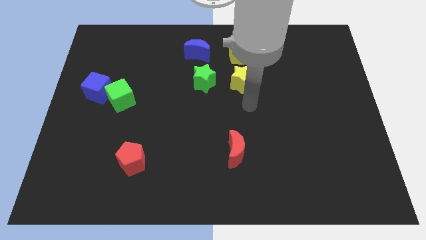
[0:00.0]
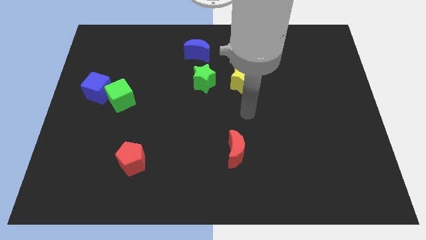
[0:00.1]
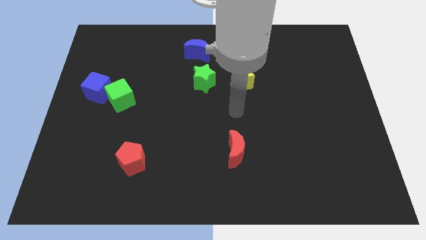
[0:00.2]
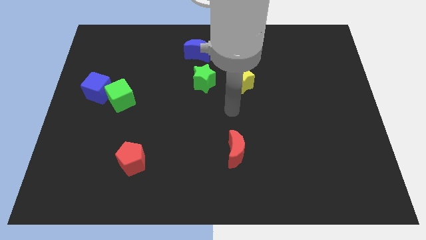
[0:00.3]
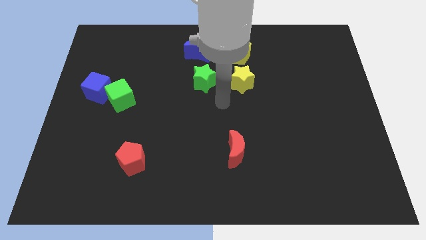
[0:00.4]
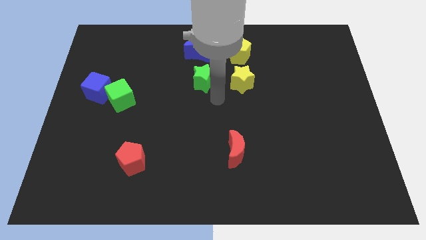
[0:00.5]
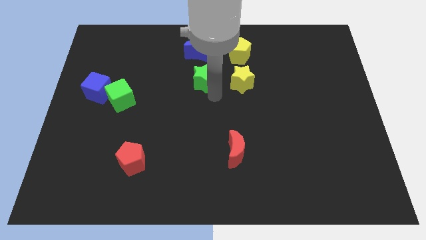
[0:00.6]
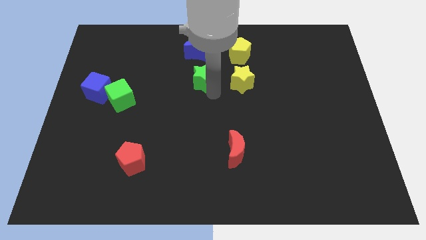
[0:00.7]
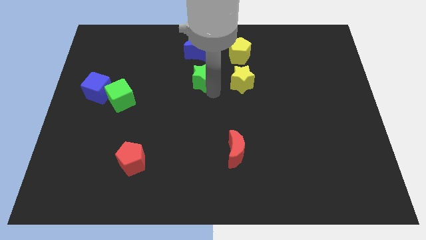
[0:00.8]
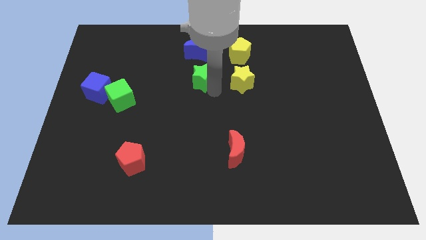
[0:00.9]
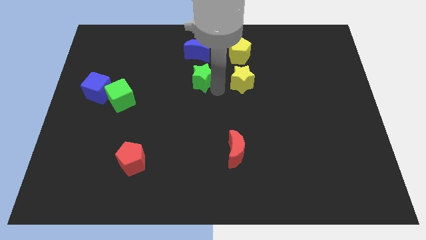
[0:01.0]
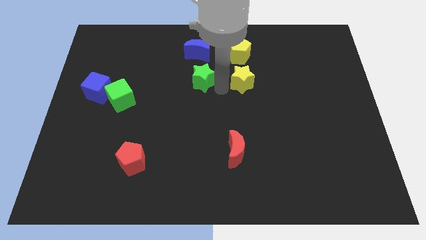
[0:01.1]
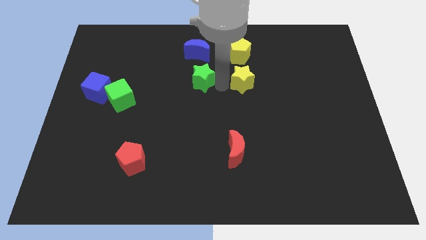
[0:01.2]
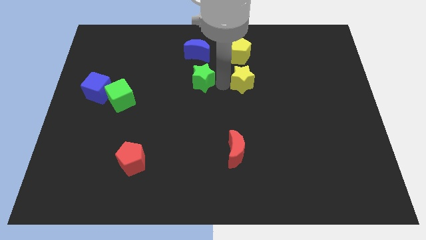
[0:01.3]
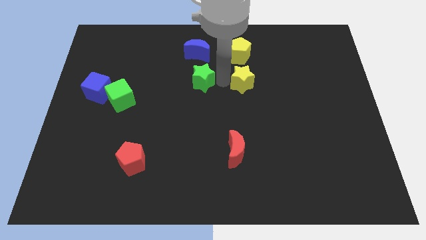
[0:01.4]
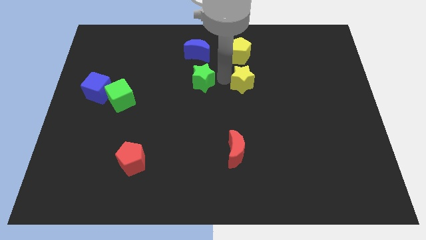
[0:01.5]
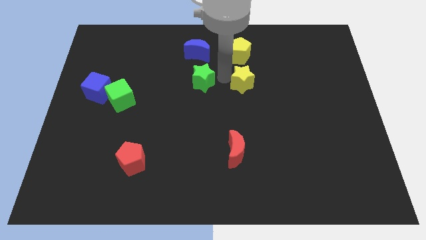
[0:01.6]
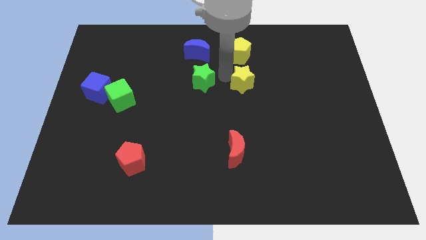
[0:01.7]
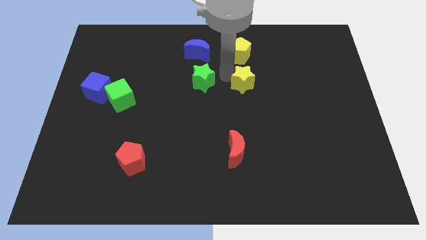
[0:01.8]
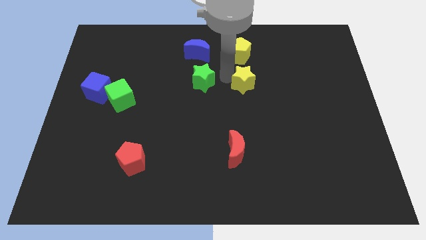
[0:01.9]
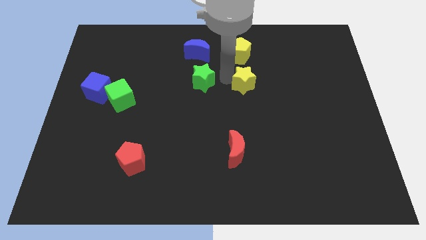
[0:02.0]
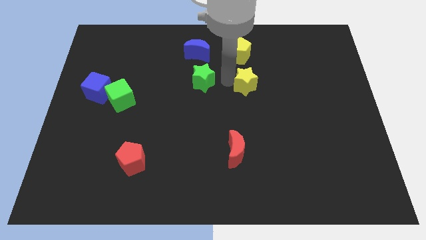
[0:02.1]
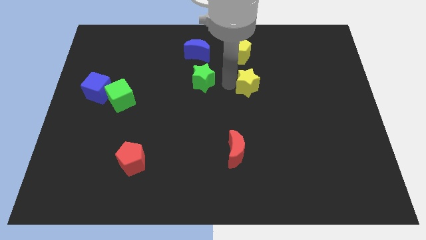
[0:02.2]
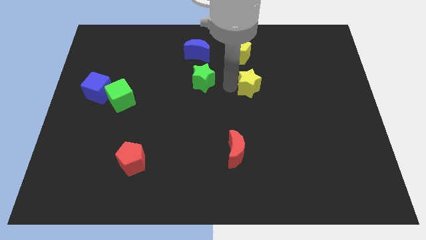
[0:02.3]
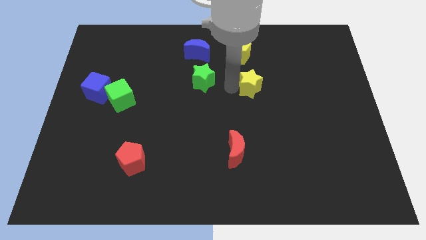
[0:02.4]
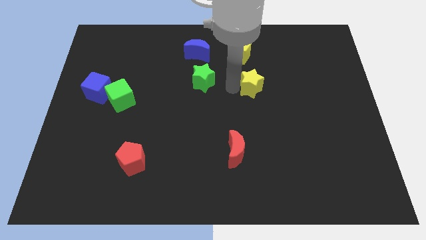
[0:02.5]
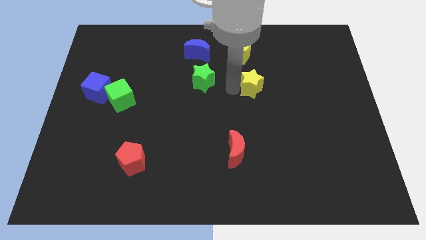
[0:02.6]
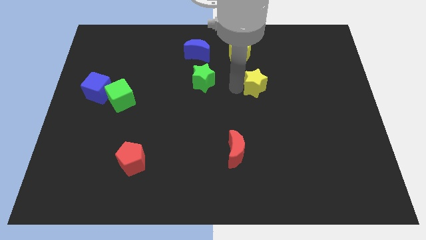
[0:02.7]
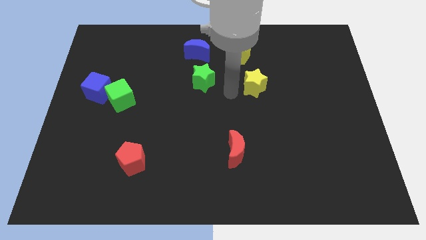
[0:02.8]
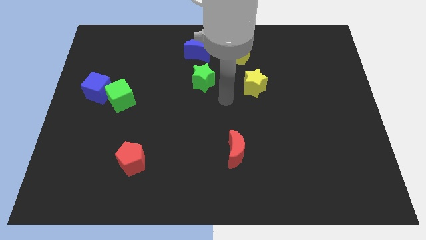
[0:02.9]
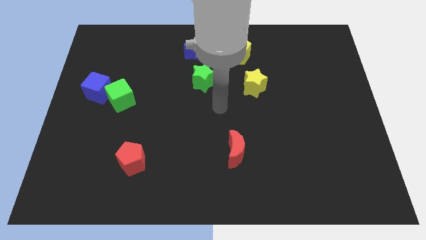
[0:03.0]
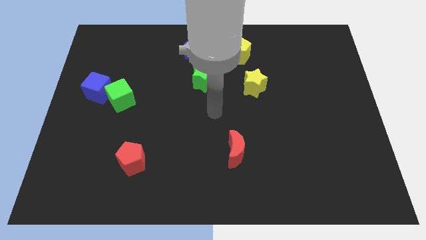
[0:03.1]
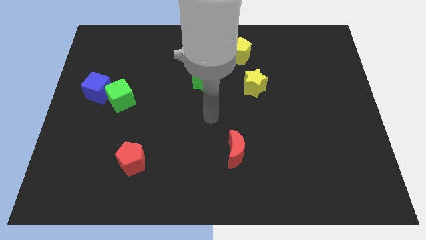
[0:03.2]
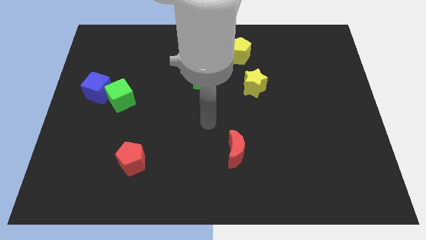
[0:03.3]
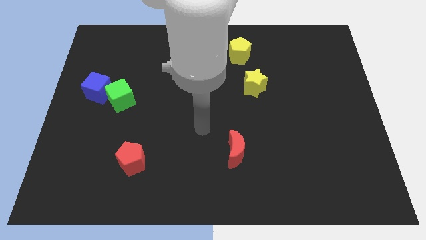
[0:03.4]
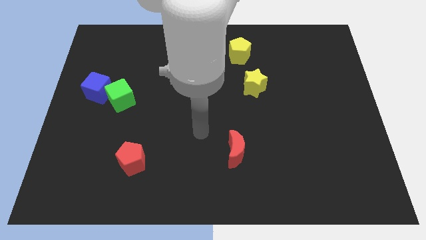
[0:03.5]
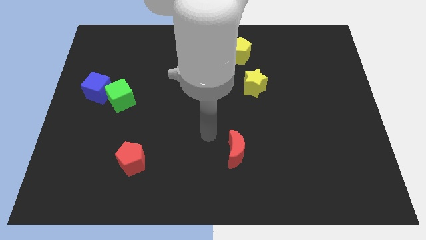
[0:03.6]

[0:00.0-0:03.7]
push the yellow star to the right of the board

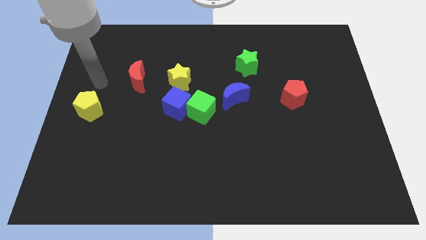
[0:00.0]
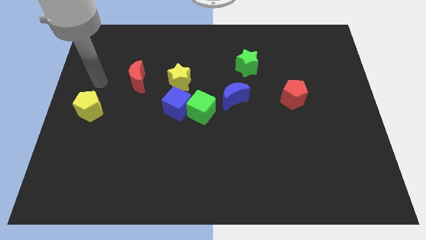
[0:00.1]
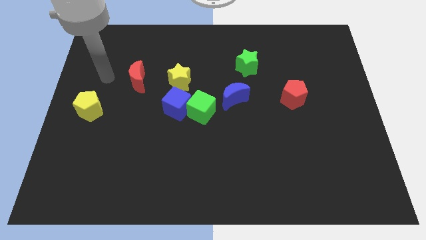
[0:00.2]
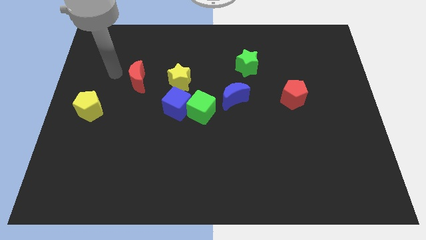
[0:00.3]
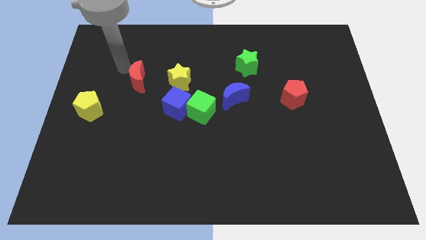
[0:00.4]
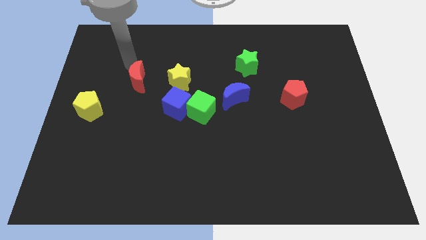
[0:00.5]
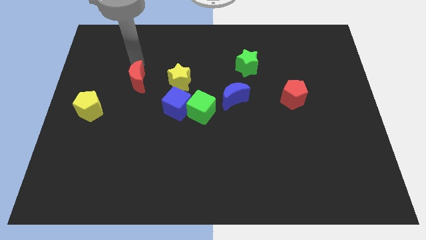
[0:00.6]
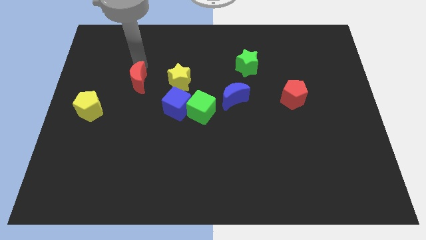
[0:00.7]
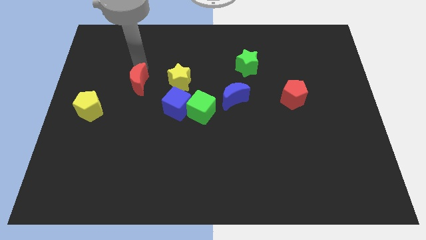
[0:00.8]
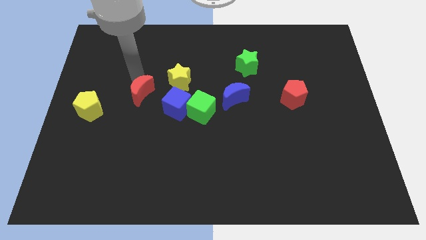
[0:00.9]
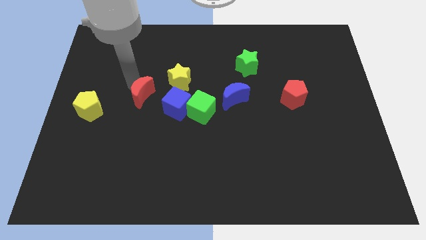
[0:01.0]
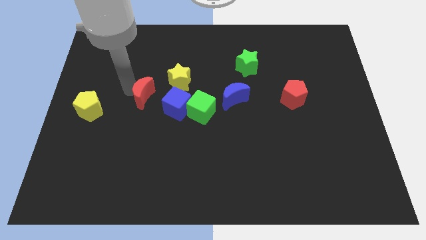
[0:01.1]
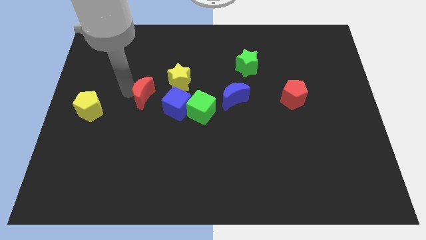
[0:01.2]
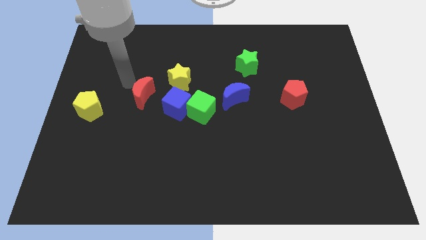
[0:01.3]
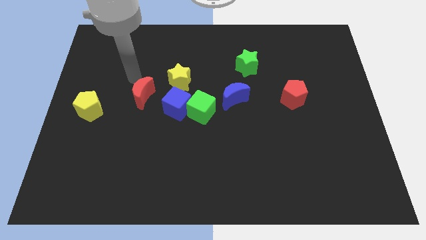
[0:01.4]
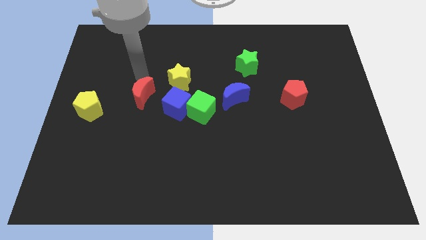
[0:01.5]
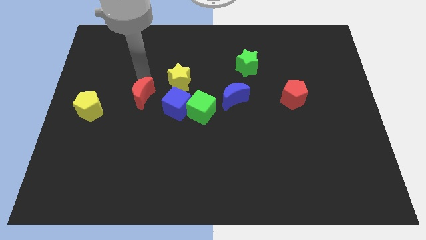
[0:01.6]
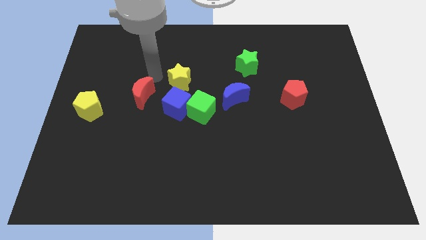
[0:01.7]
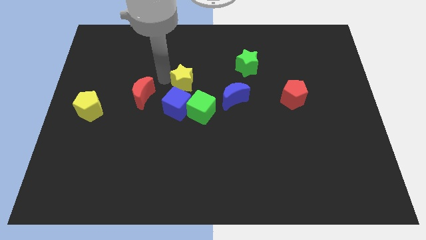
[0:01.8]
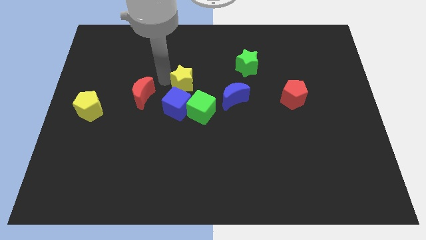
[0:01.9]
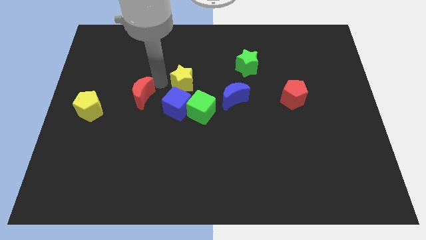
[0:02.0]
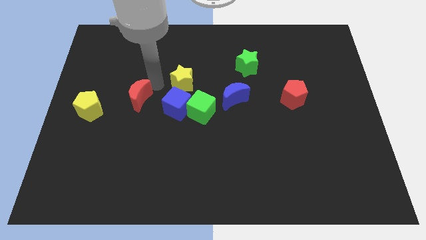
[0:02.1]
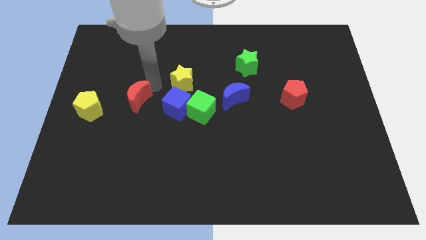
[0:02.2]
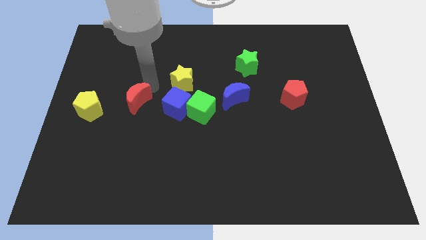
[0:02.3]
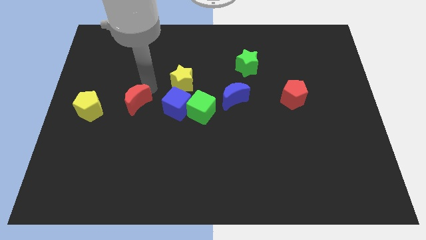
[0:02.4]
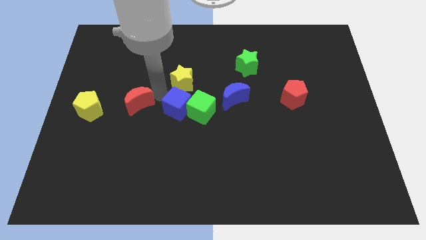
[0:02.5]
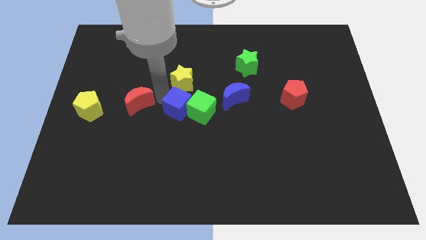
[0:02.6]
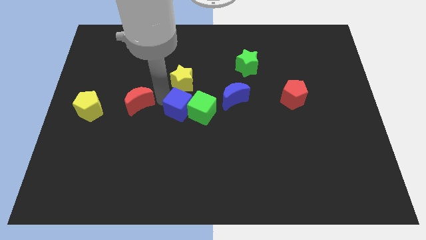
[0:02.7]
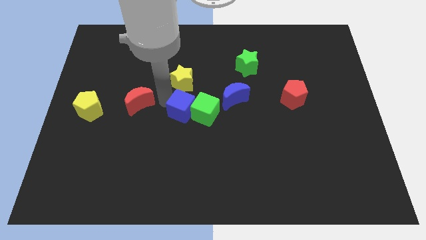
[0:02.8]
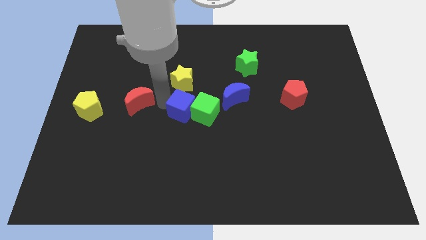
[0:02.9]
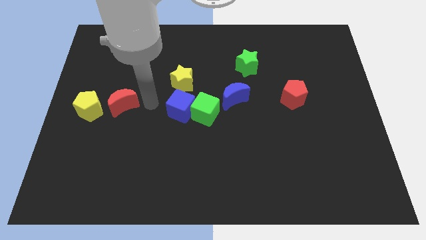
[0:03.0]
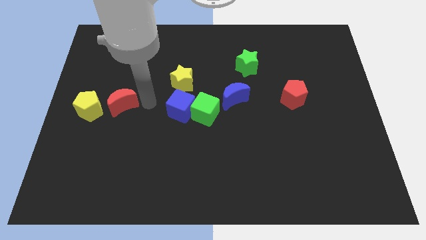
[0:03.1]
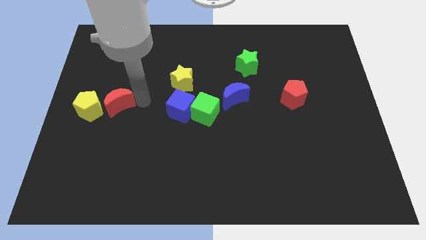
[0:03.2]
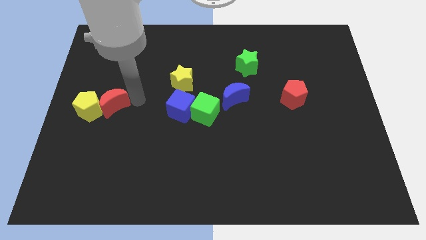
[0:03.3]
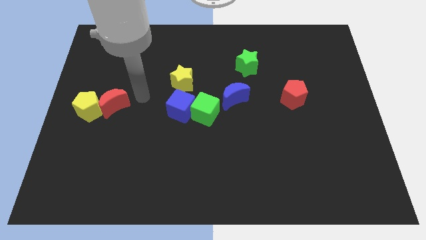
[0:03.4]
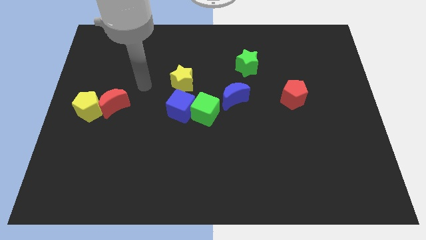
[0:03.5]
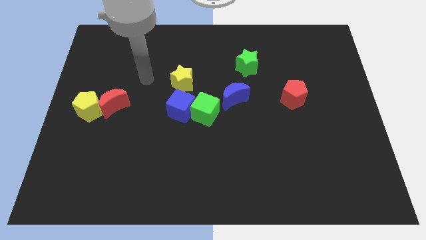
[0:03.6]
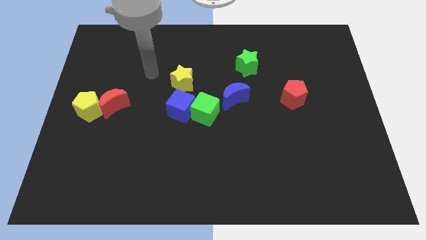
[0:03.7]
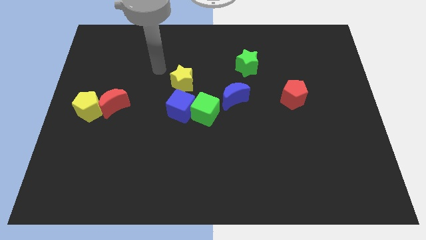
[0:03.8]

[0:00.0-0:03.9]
place the red moon to the right of the yellow pentagon

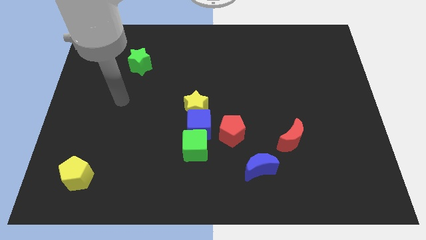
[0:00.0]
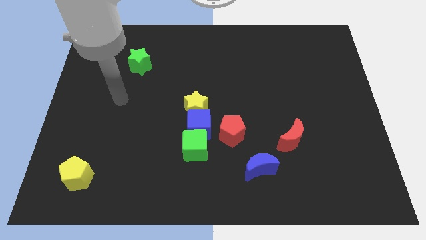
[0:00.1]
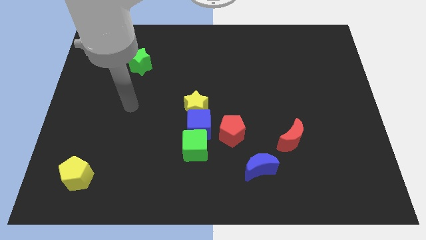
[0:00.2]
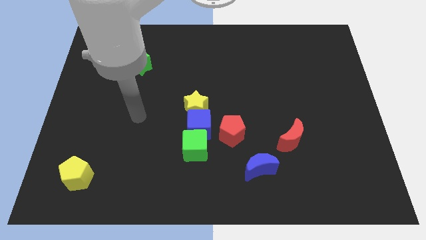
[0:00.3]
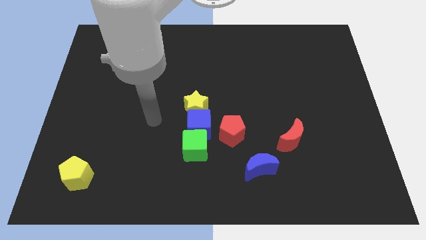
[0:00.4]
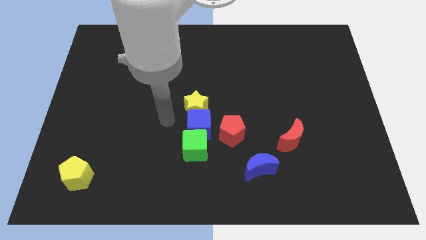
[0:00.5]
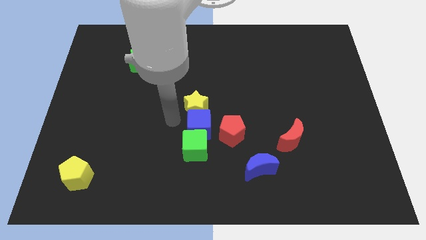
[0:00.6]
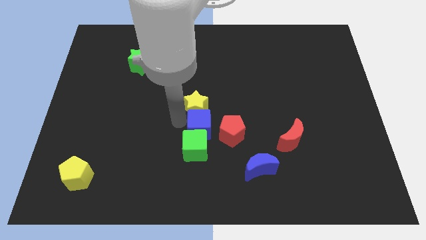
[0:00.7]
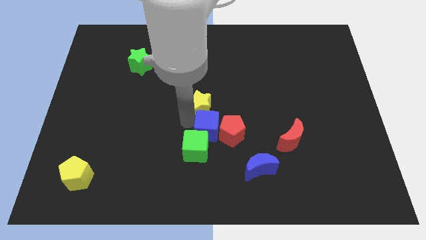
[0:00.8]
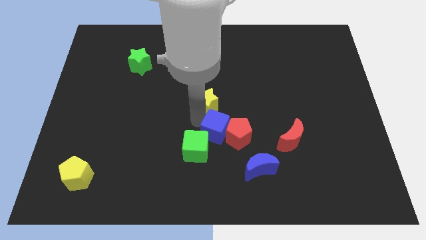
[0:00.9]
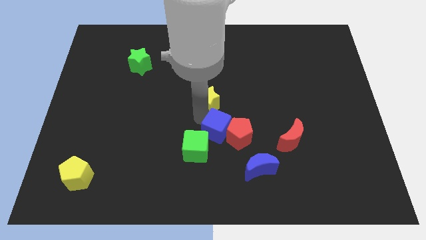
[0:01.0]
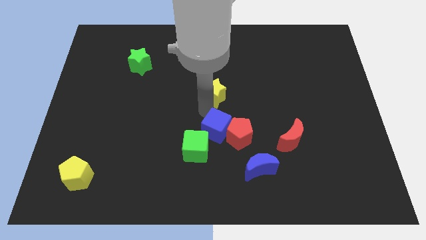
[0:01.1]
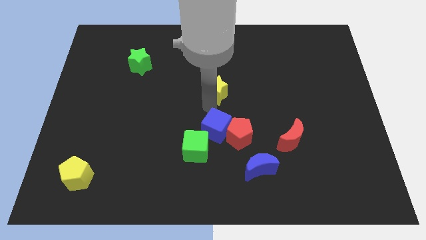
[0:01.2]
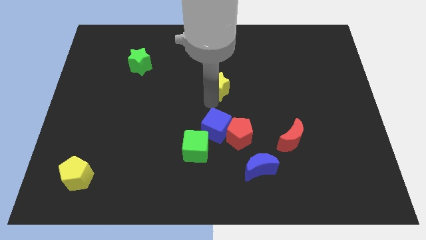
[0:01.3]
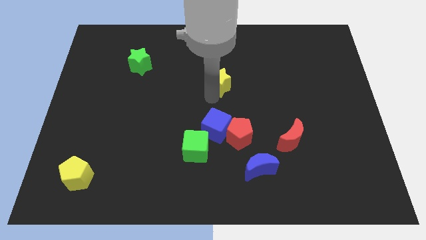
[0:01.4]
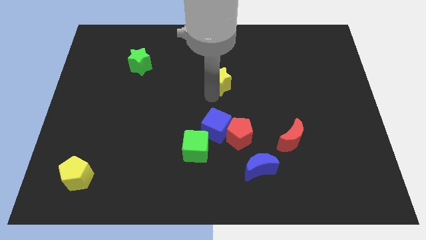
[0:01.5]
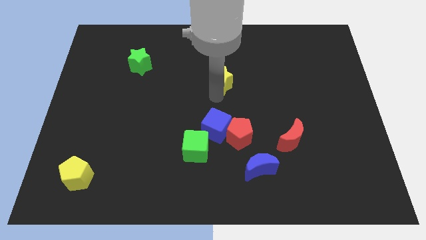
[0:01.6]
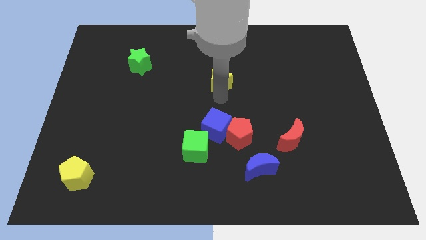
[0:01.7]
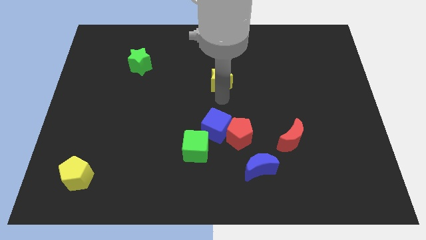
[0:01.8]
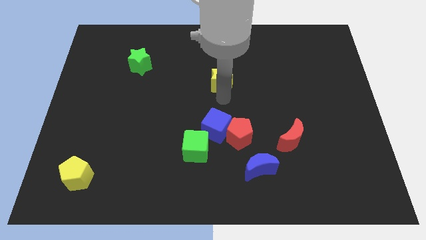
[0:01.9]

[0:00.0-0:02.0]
separate the yellow star from the blue cube
